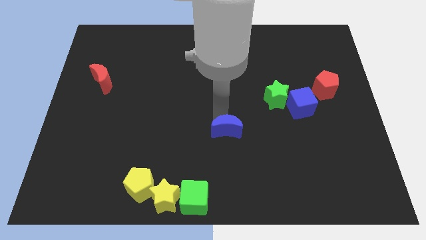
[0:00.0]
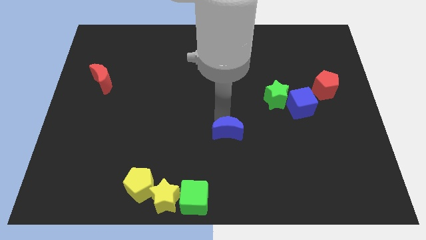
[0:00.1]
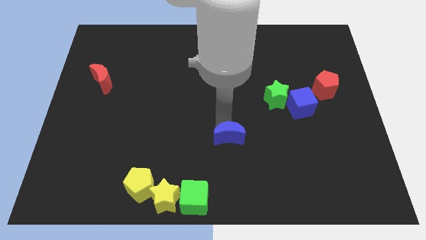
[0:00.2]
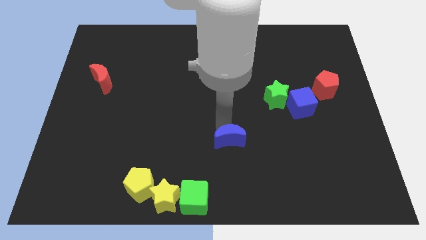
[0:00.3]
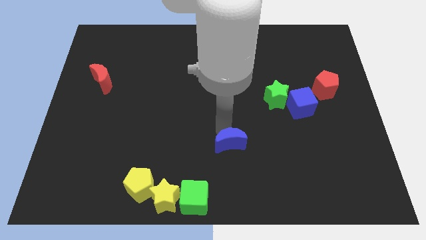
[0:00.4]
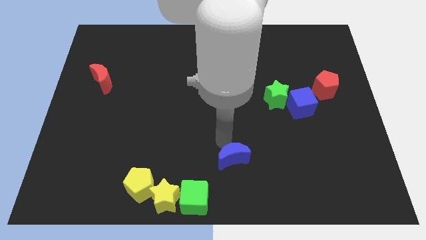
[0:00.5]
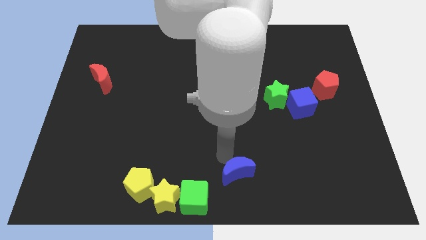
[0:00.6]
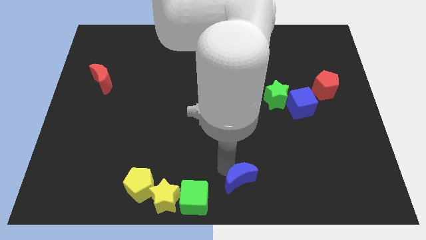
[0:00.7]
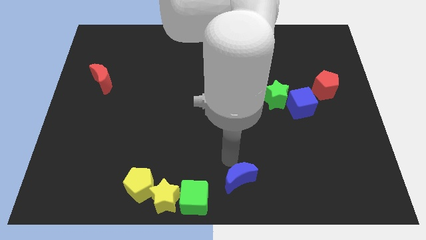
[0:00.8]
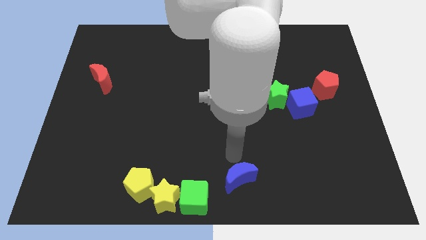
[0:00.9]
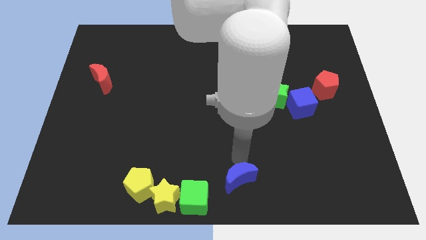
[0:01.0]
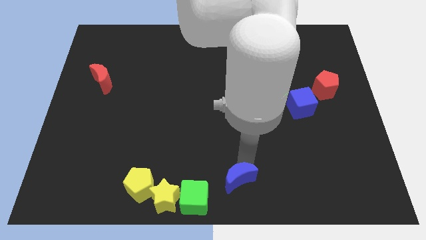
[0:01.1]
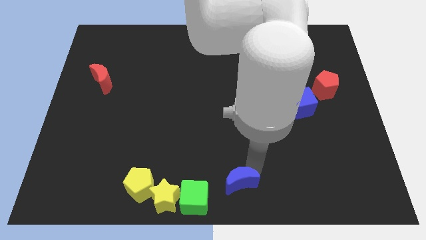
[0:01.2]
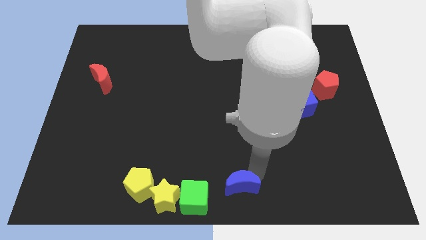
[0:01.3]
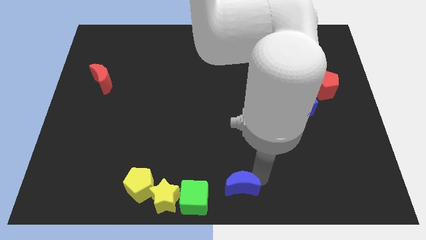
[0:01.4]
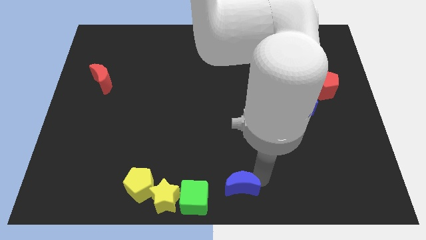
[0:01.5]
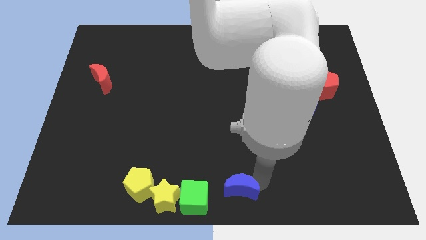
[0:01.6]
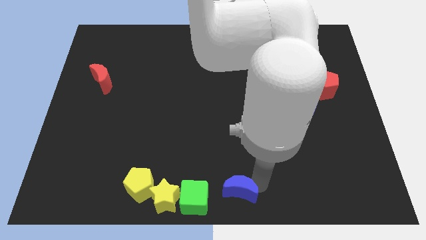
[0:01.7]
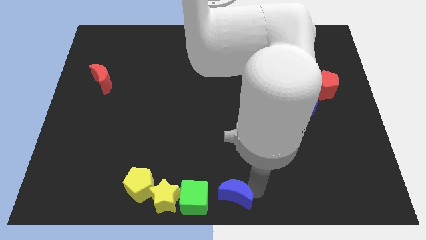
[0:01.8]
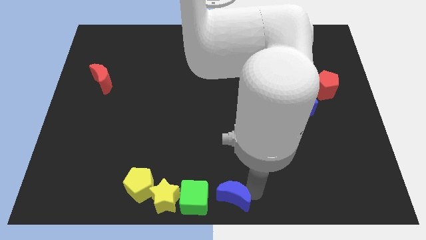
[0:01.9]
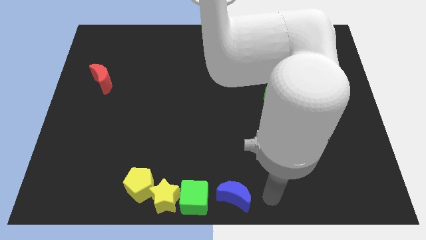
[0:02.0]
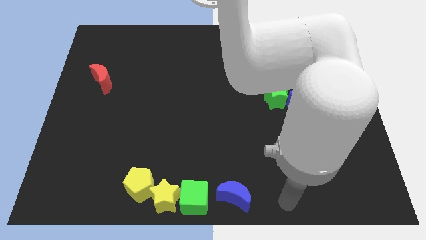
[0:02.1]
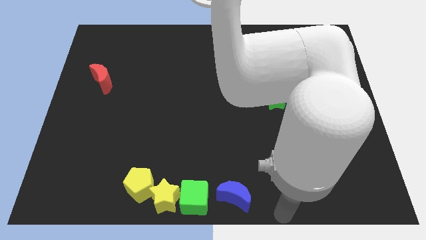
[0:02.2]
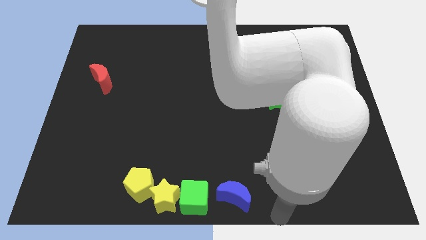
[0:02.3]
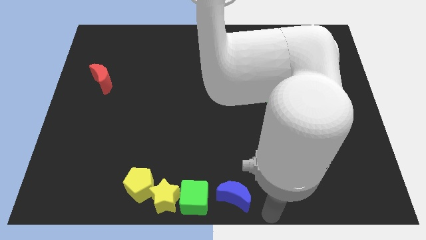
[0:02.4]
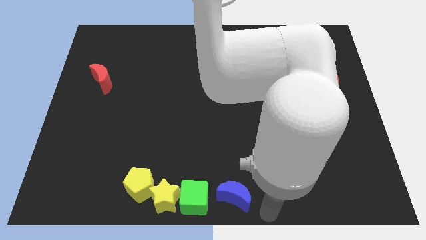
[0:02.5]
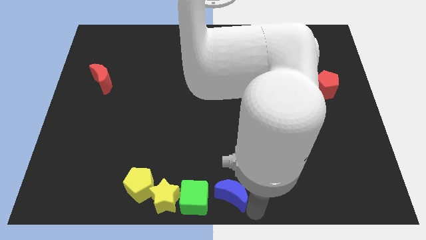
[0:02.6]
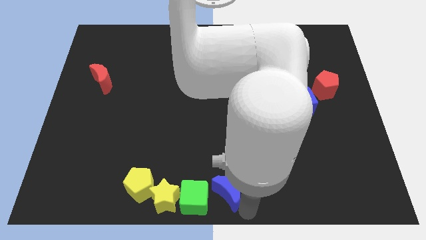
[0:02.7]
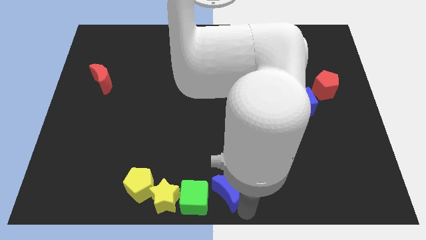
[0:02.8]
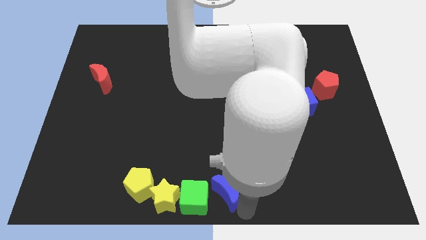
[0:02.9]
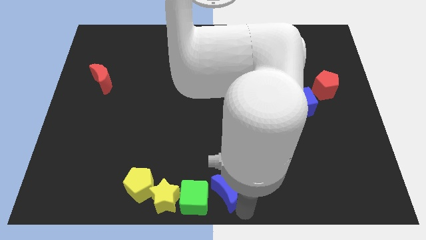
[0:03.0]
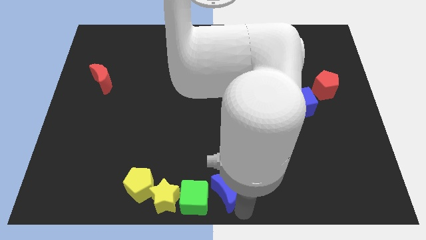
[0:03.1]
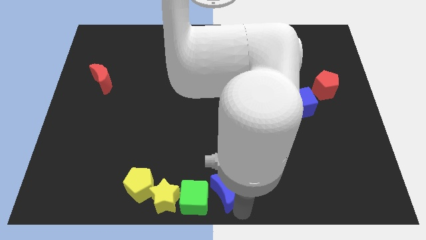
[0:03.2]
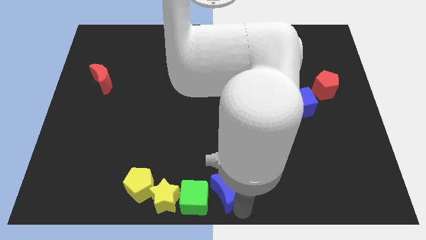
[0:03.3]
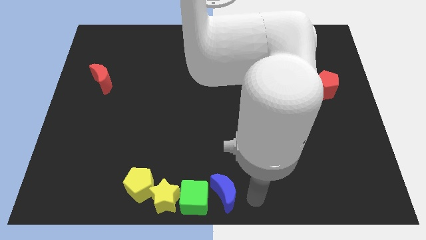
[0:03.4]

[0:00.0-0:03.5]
move the blue crescent parallel right to the green cube

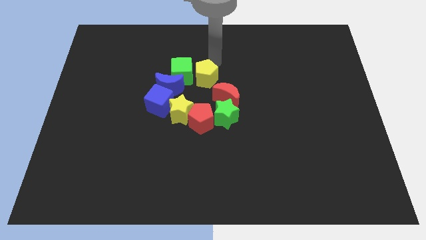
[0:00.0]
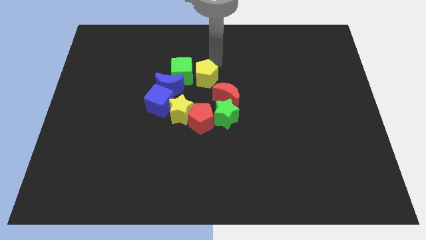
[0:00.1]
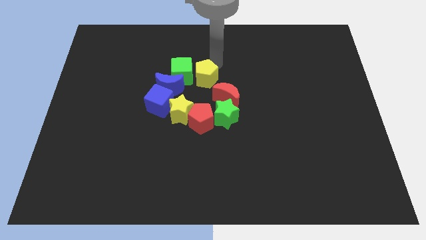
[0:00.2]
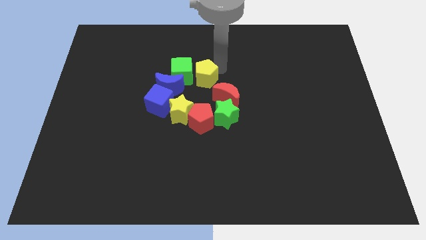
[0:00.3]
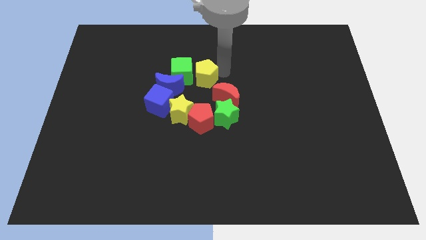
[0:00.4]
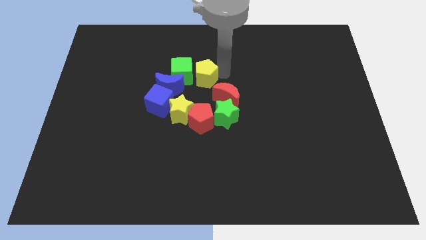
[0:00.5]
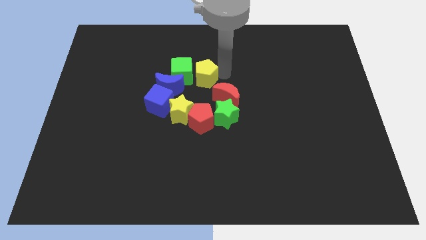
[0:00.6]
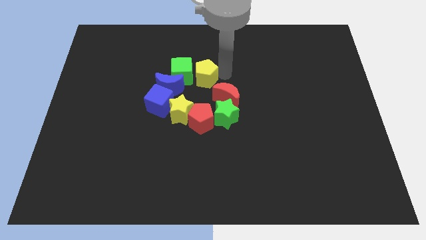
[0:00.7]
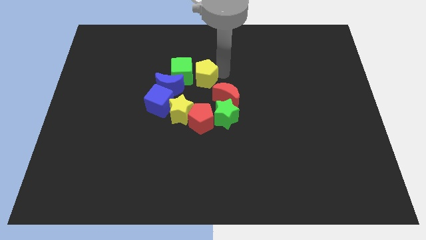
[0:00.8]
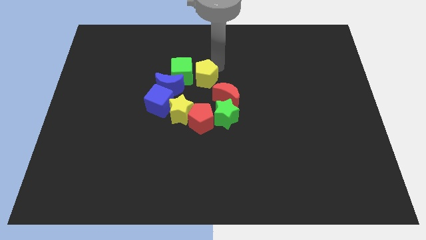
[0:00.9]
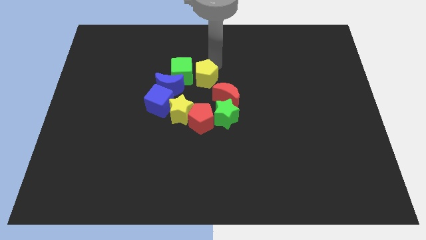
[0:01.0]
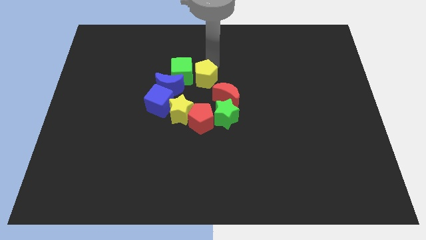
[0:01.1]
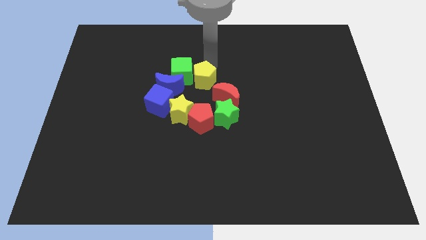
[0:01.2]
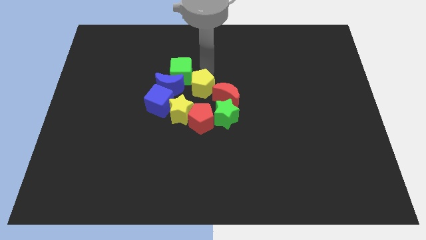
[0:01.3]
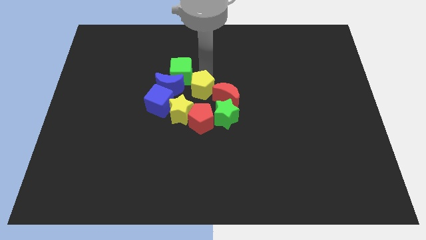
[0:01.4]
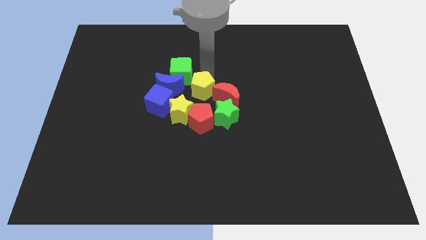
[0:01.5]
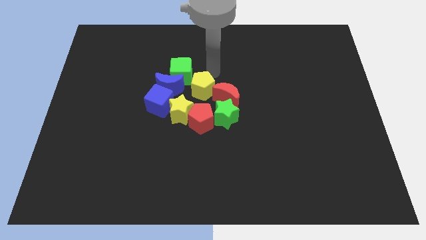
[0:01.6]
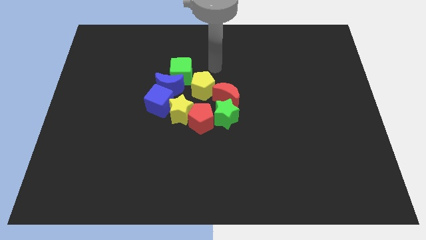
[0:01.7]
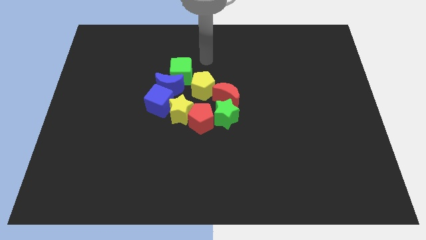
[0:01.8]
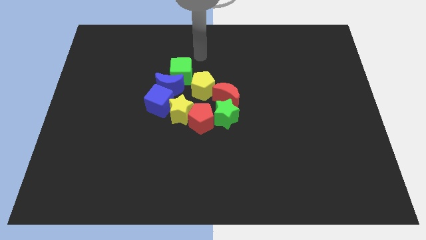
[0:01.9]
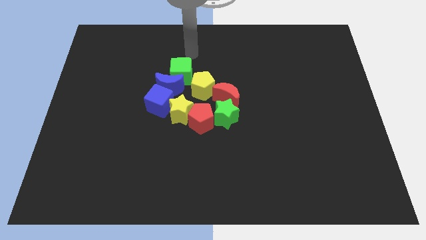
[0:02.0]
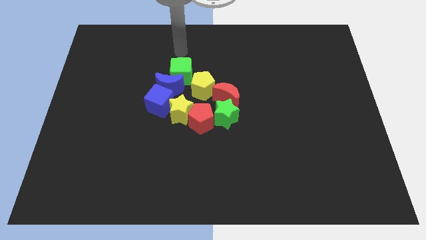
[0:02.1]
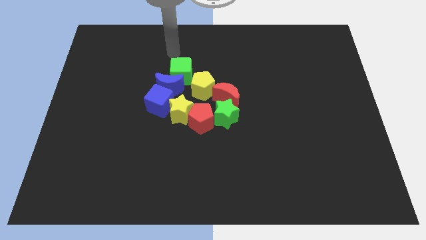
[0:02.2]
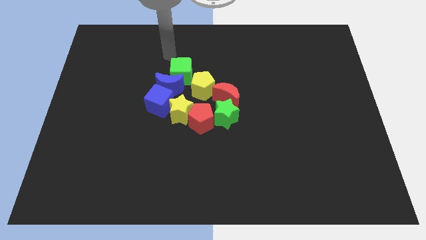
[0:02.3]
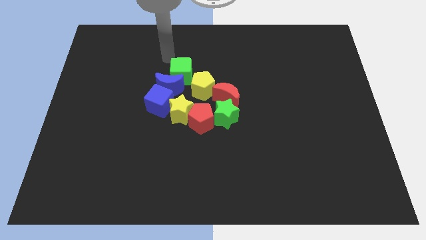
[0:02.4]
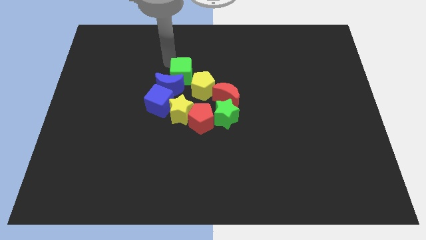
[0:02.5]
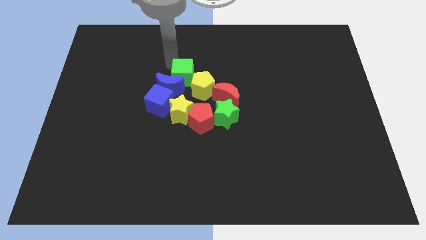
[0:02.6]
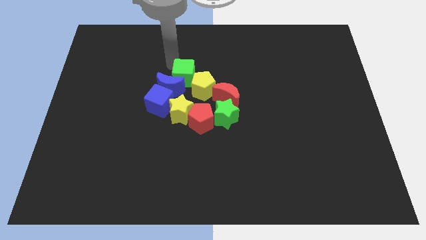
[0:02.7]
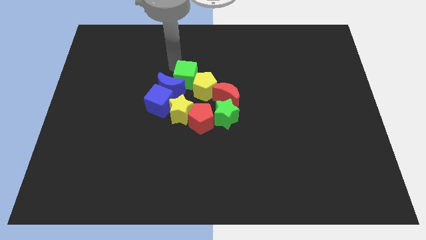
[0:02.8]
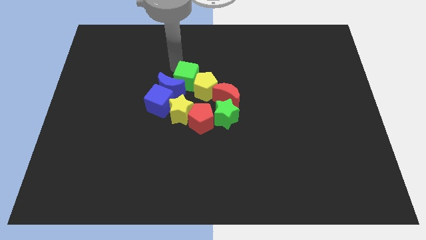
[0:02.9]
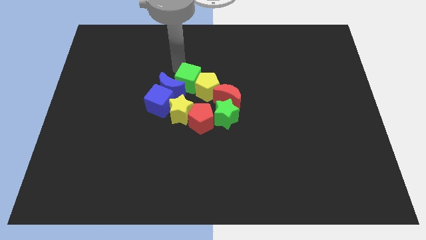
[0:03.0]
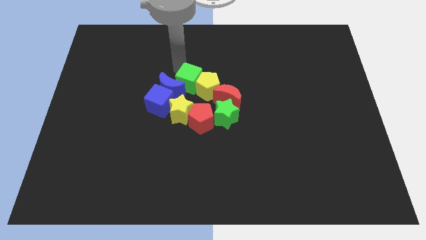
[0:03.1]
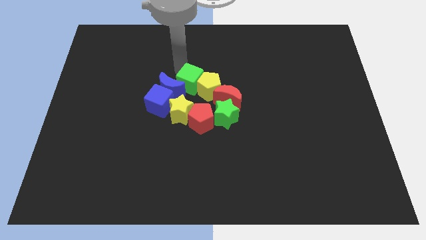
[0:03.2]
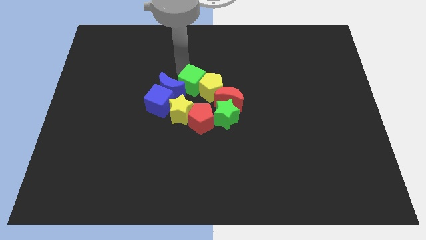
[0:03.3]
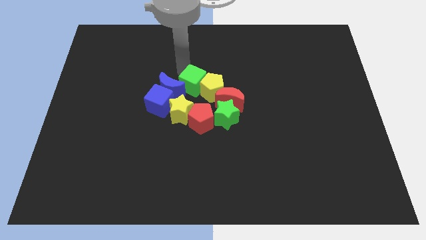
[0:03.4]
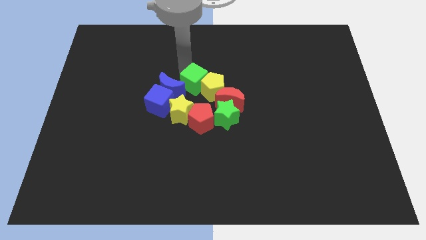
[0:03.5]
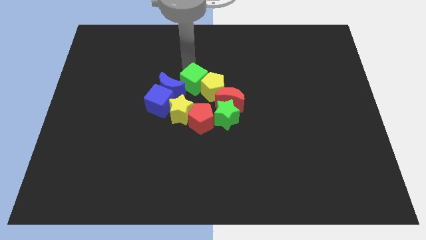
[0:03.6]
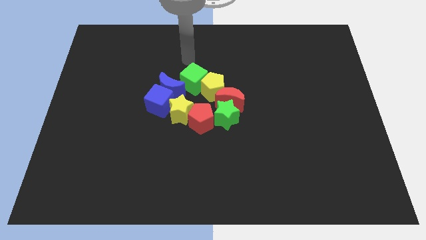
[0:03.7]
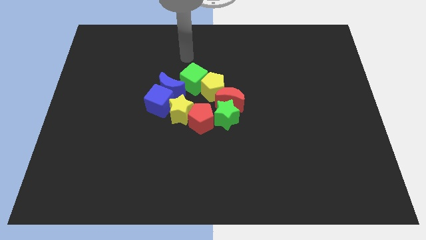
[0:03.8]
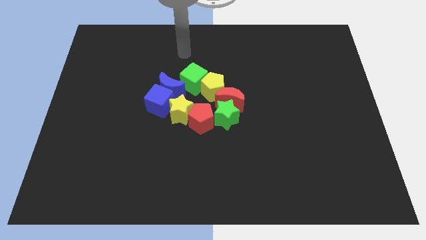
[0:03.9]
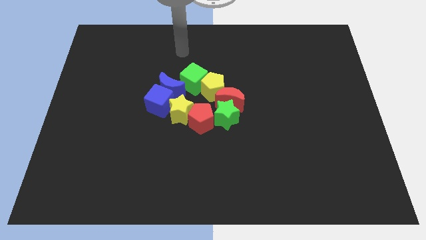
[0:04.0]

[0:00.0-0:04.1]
push the green cube in between yellow pentagon and blue moon

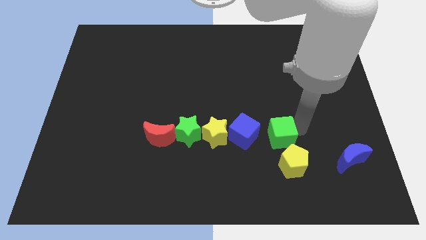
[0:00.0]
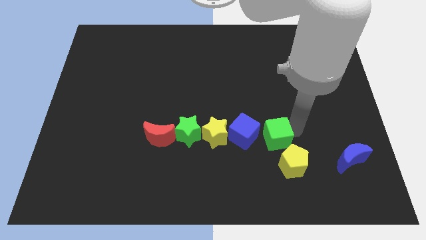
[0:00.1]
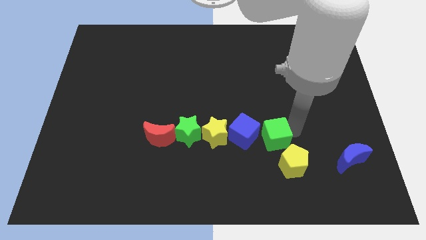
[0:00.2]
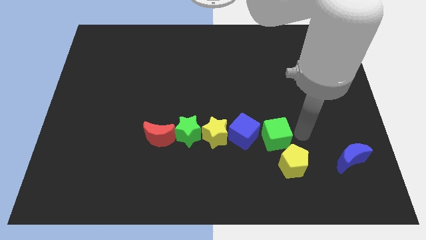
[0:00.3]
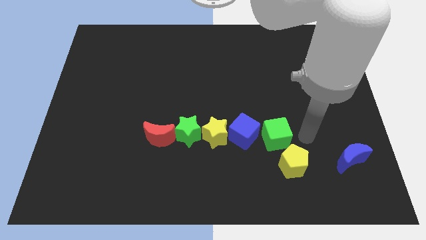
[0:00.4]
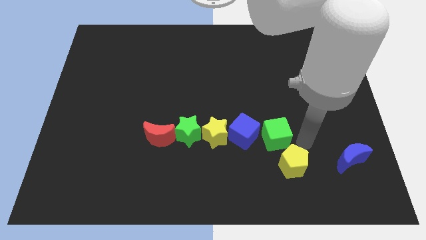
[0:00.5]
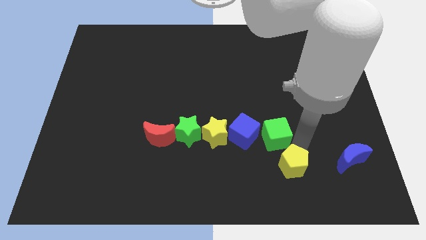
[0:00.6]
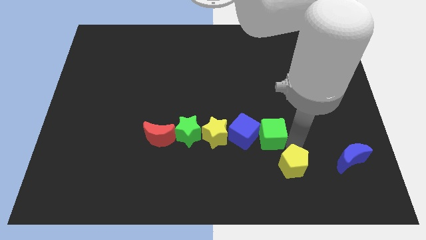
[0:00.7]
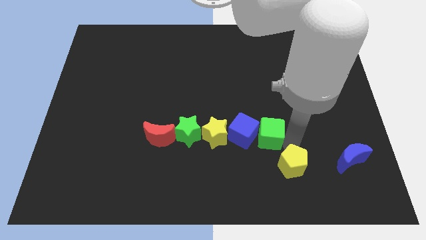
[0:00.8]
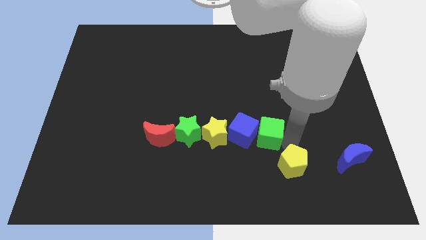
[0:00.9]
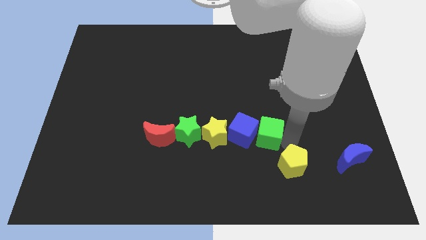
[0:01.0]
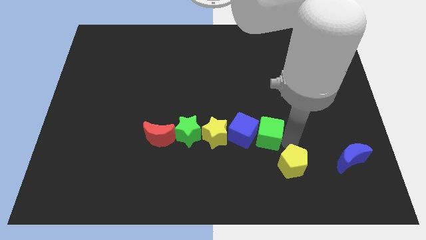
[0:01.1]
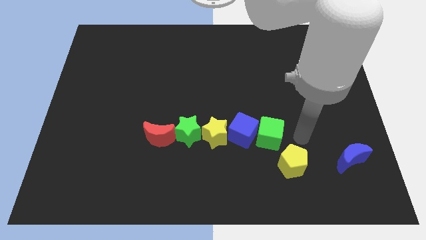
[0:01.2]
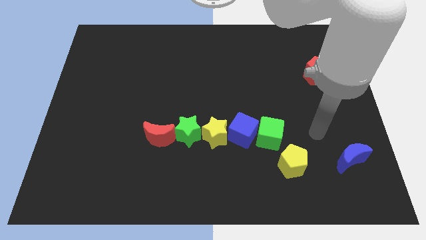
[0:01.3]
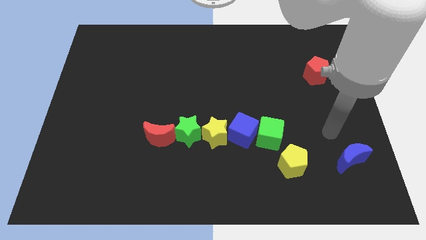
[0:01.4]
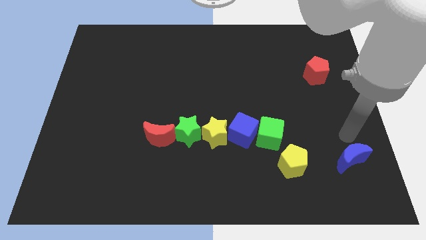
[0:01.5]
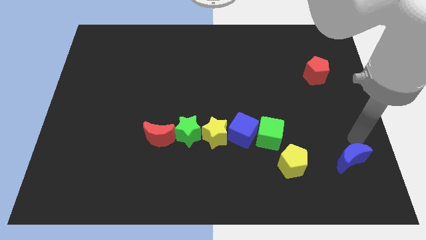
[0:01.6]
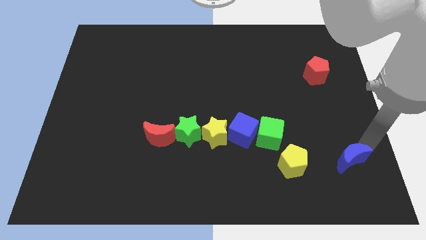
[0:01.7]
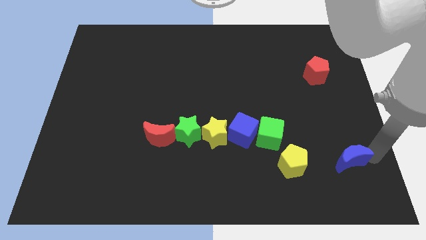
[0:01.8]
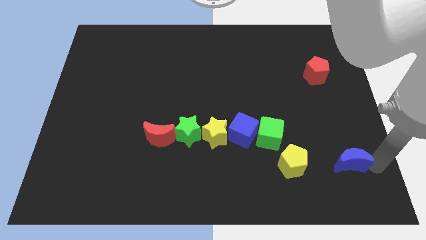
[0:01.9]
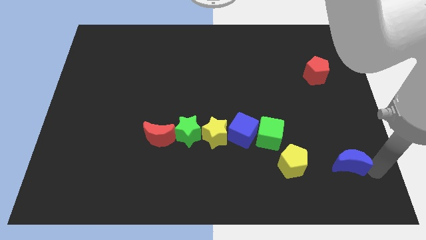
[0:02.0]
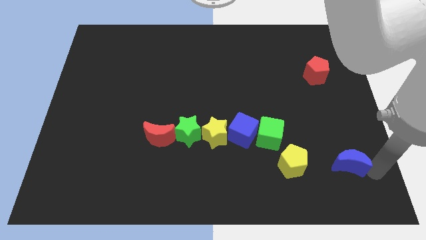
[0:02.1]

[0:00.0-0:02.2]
slightly move the green cube of the board
